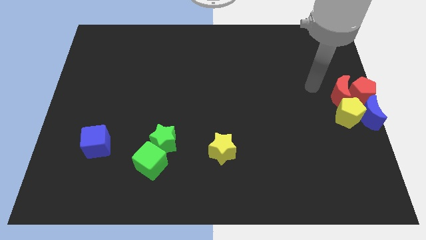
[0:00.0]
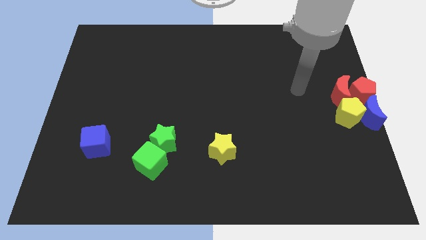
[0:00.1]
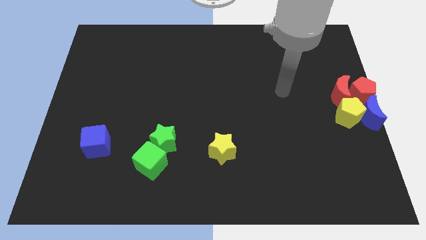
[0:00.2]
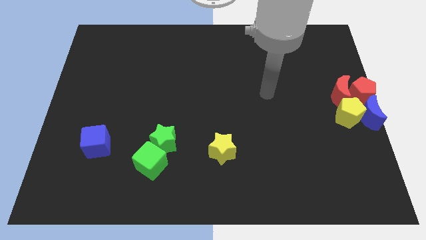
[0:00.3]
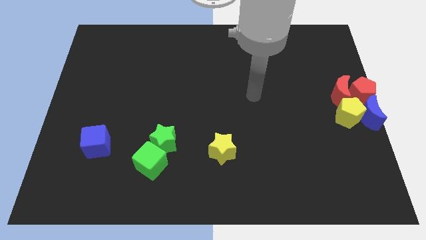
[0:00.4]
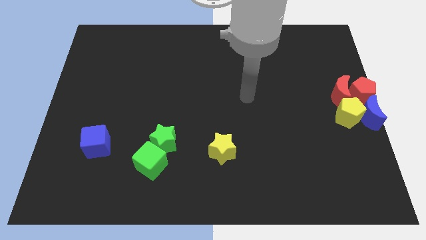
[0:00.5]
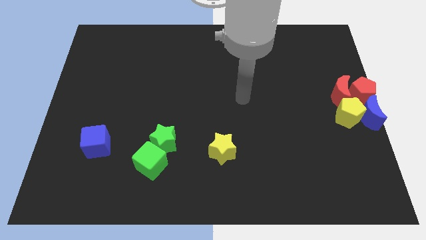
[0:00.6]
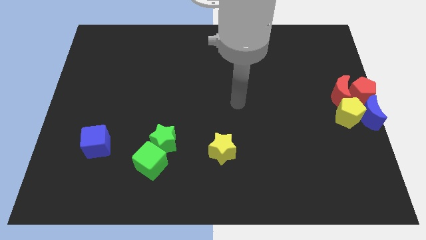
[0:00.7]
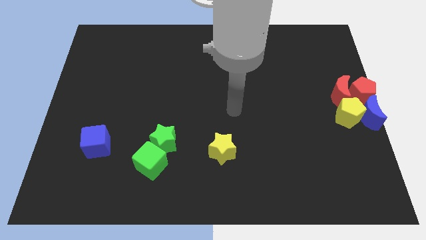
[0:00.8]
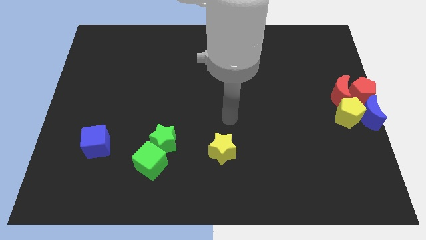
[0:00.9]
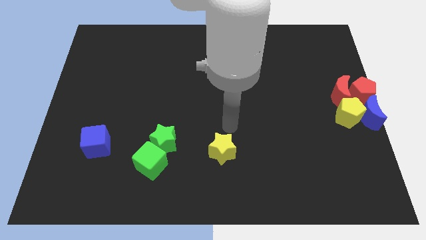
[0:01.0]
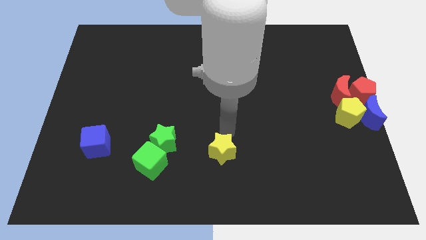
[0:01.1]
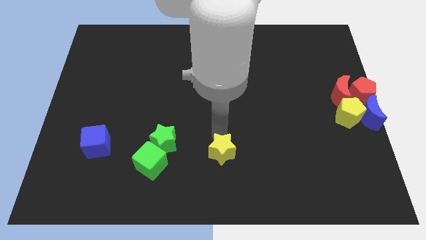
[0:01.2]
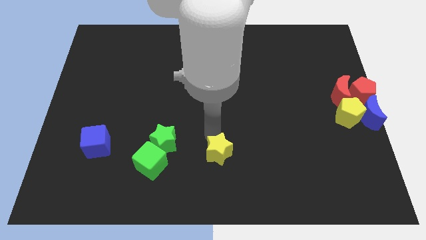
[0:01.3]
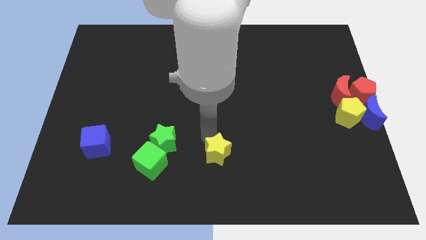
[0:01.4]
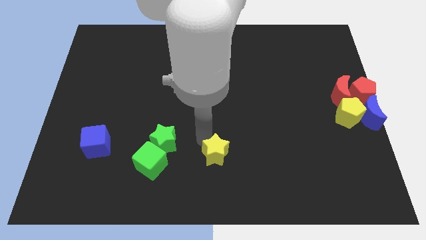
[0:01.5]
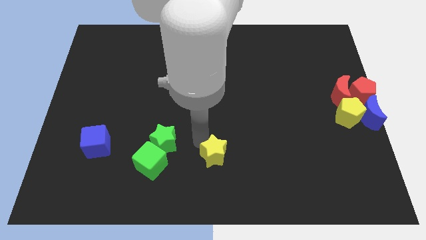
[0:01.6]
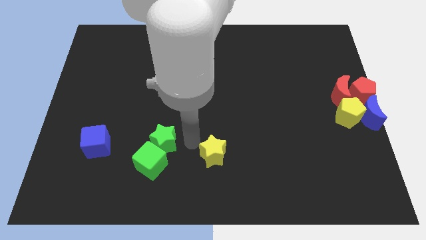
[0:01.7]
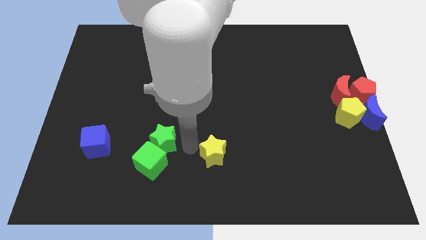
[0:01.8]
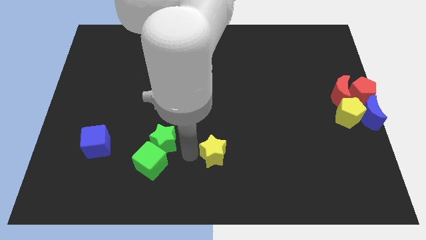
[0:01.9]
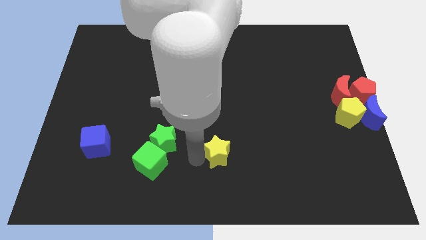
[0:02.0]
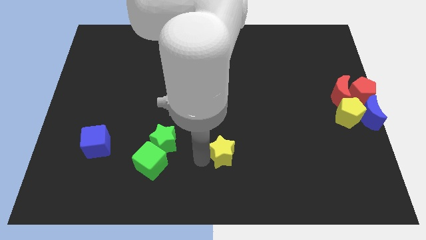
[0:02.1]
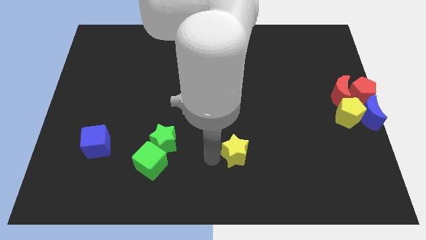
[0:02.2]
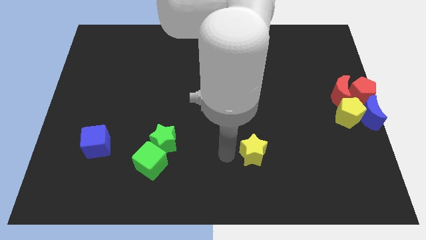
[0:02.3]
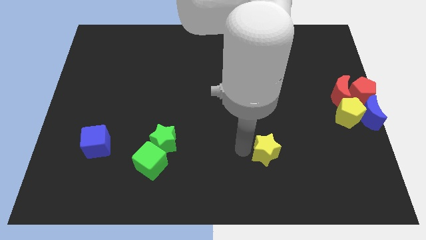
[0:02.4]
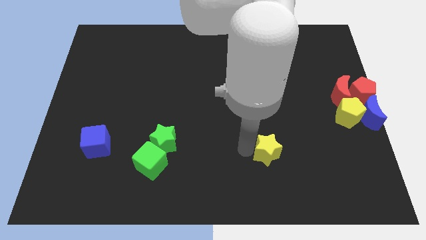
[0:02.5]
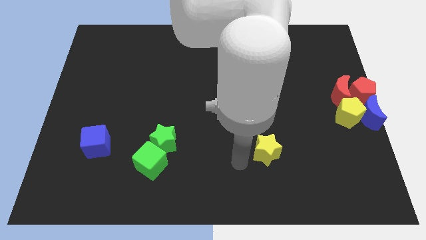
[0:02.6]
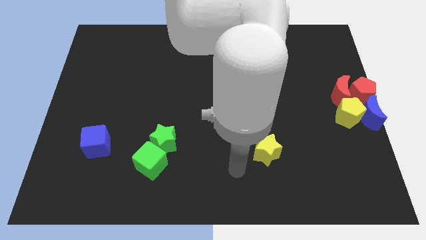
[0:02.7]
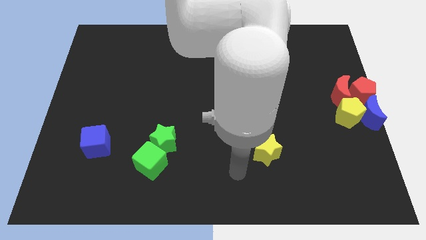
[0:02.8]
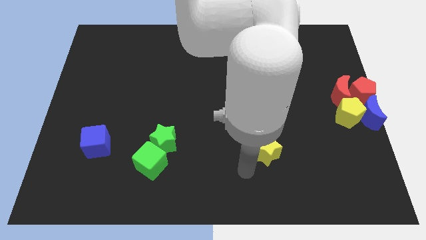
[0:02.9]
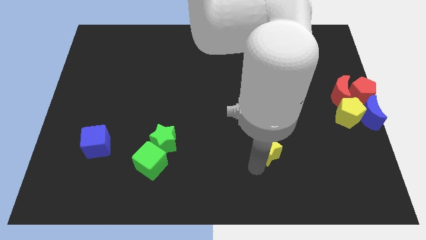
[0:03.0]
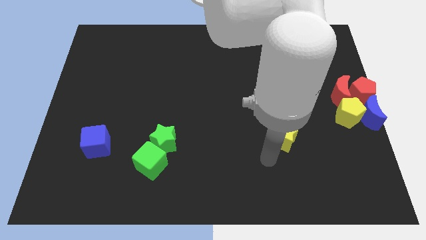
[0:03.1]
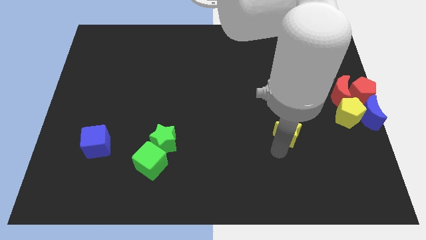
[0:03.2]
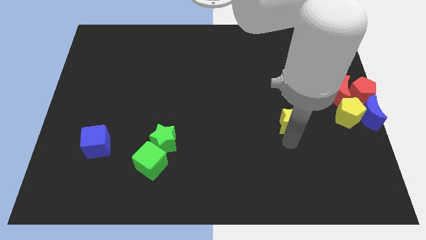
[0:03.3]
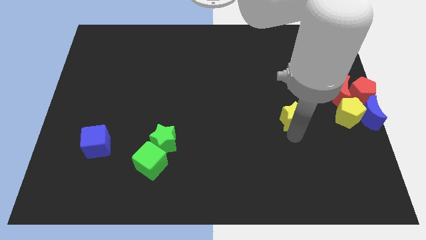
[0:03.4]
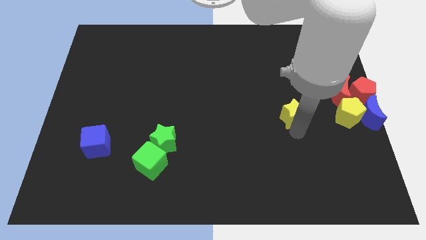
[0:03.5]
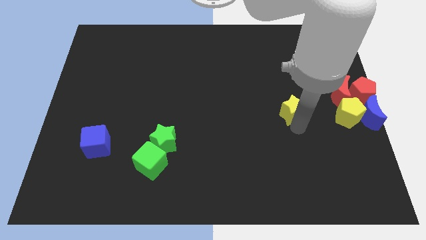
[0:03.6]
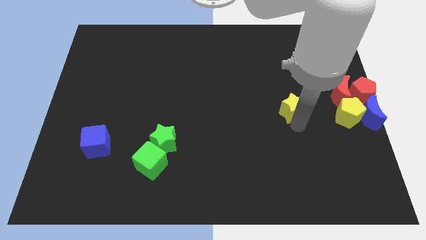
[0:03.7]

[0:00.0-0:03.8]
move the yellow star to the left of the yellow pentagon

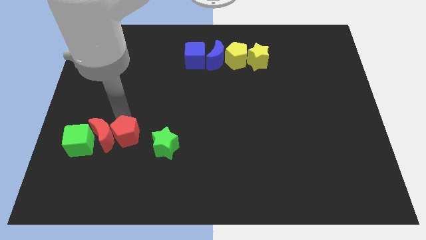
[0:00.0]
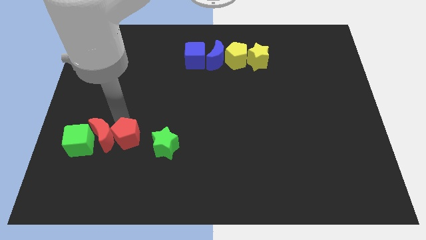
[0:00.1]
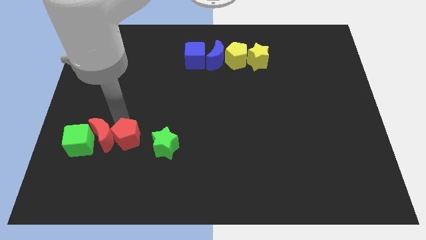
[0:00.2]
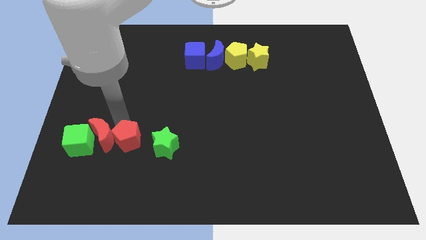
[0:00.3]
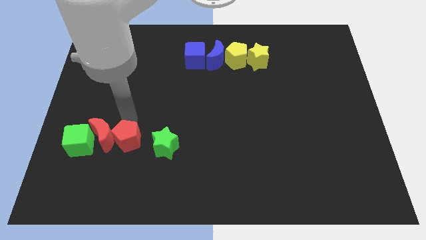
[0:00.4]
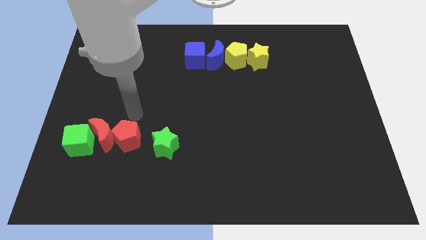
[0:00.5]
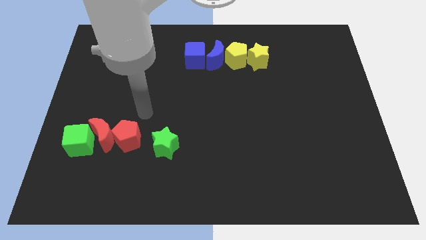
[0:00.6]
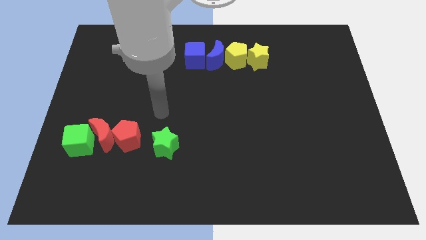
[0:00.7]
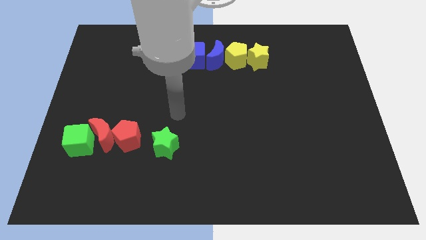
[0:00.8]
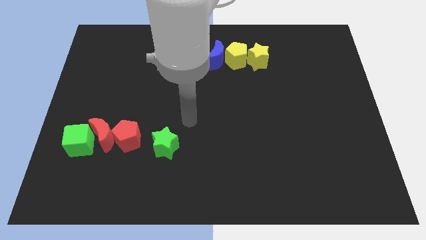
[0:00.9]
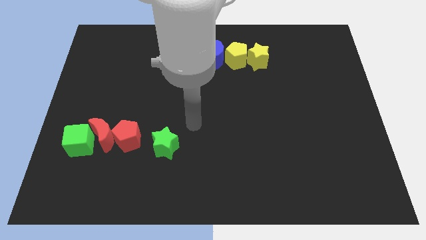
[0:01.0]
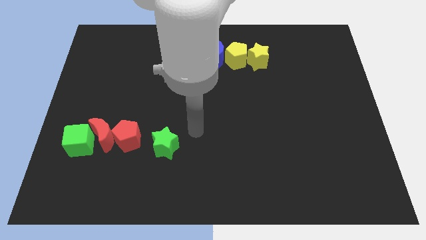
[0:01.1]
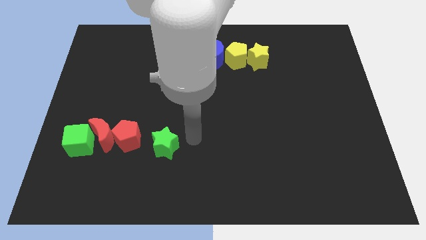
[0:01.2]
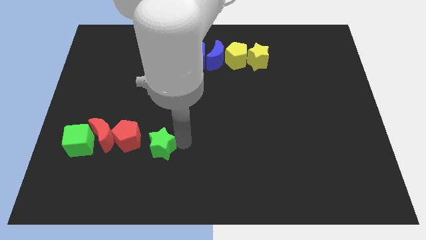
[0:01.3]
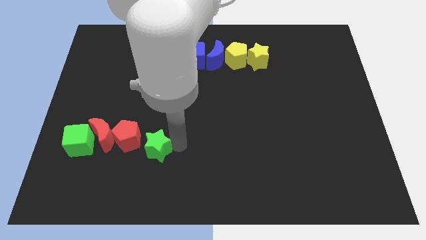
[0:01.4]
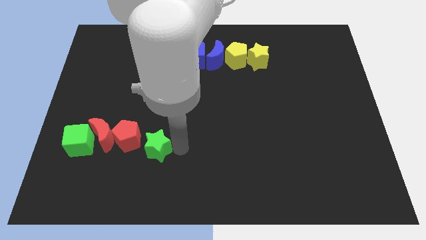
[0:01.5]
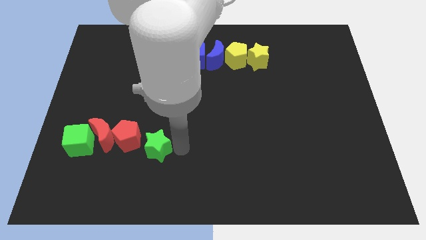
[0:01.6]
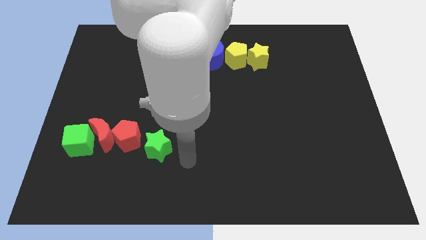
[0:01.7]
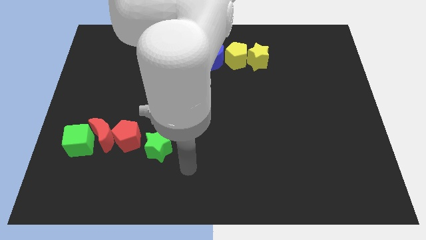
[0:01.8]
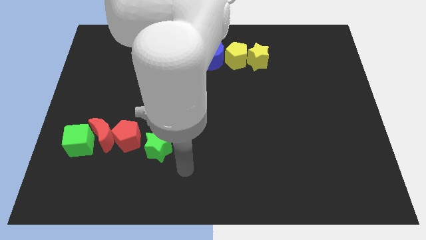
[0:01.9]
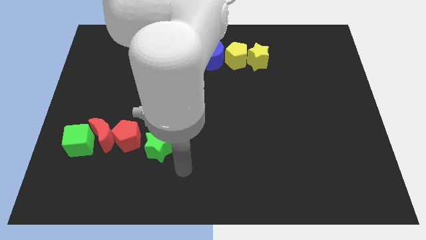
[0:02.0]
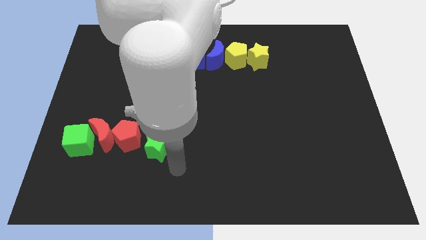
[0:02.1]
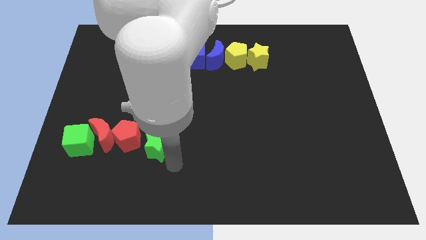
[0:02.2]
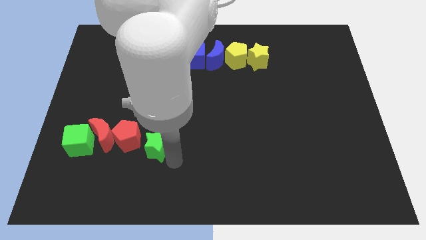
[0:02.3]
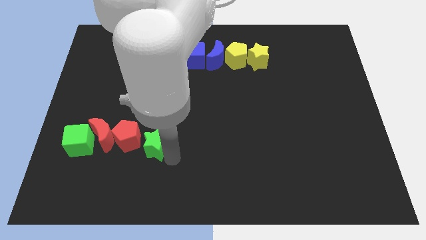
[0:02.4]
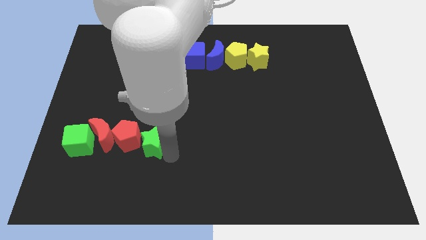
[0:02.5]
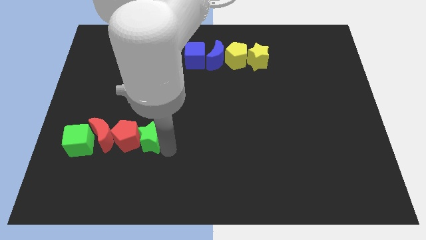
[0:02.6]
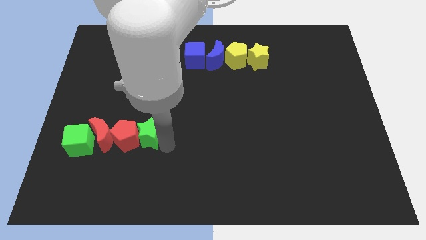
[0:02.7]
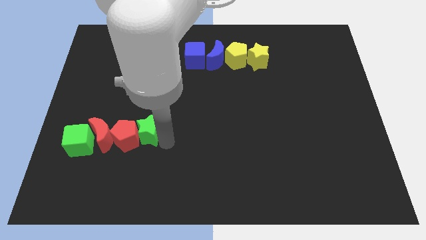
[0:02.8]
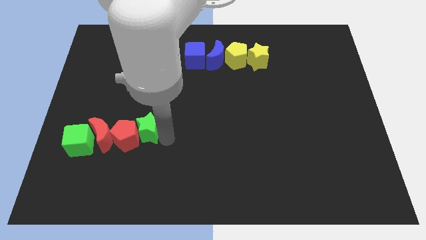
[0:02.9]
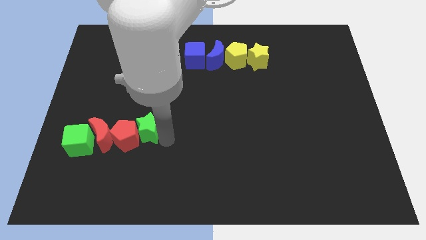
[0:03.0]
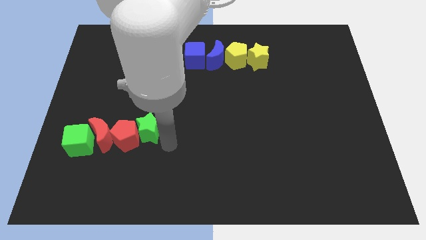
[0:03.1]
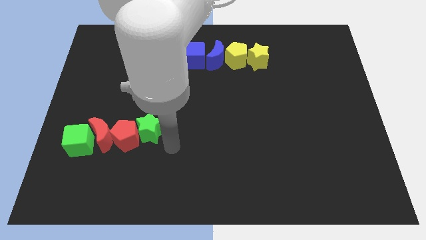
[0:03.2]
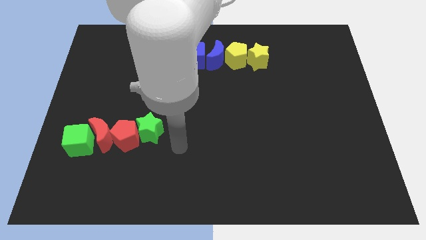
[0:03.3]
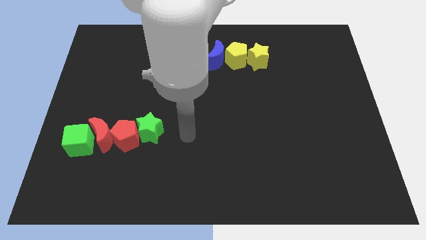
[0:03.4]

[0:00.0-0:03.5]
push the green star into the group of blocks

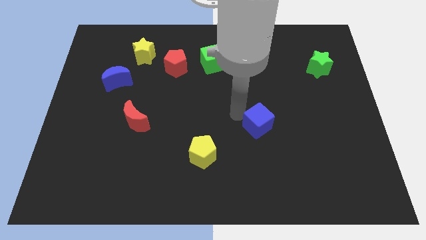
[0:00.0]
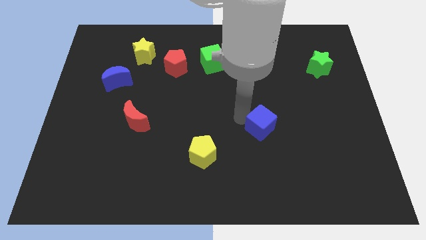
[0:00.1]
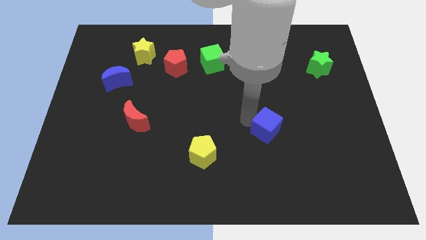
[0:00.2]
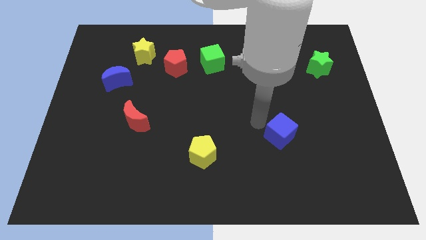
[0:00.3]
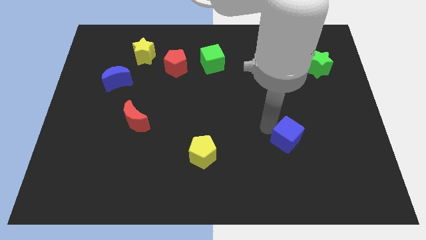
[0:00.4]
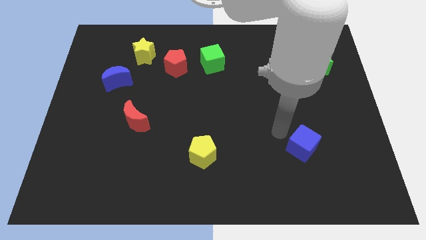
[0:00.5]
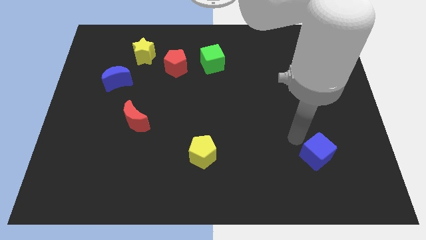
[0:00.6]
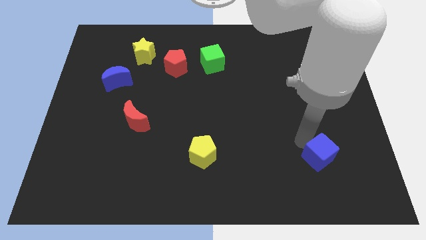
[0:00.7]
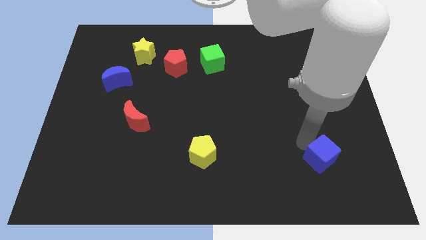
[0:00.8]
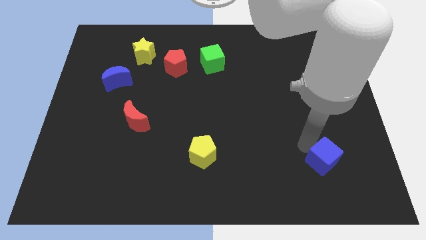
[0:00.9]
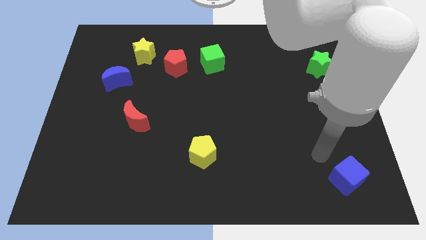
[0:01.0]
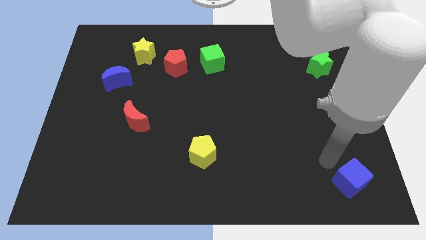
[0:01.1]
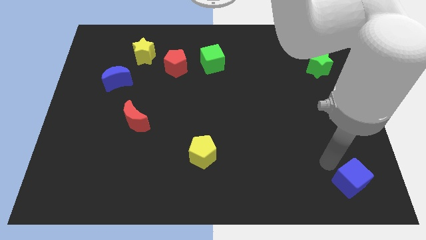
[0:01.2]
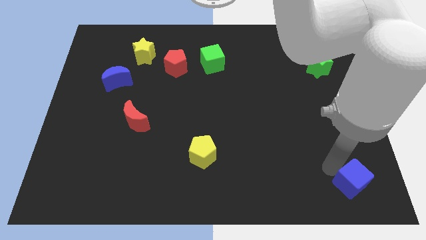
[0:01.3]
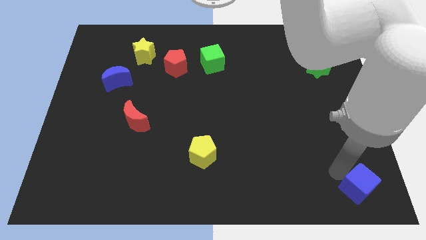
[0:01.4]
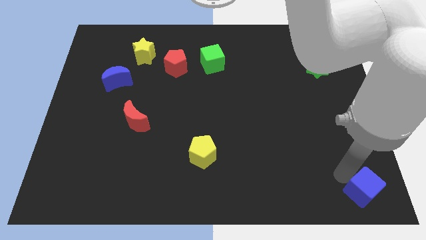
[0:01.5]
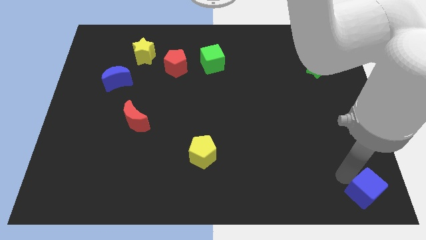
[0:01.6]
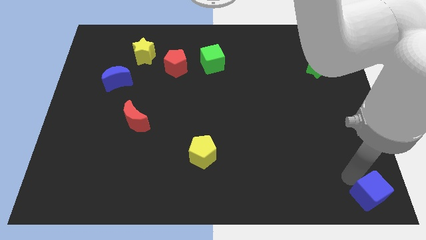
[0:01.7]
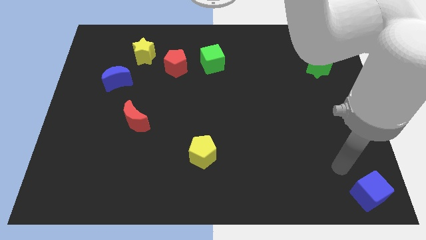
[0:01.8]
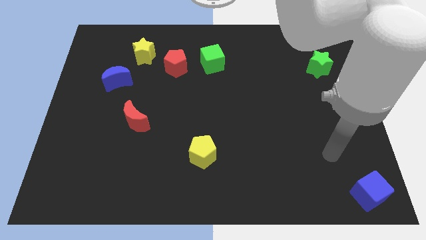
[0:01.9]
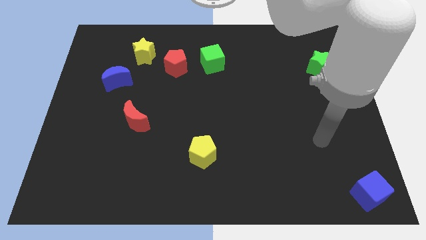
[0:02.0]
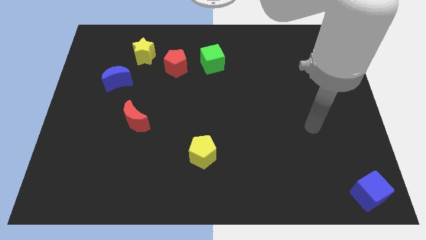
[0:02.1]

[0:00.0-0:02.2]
place the blue cube at the bottom right corner of the board
